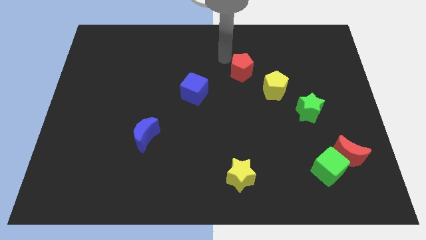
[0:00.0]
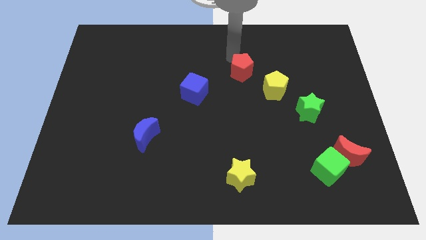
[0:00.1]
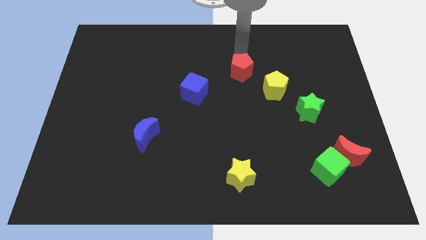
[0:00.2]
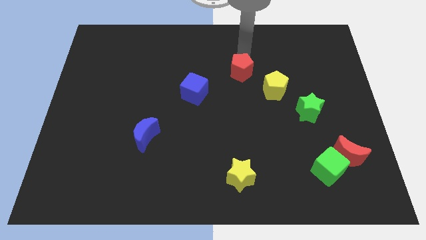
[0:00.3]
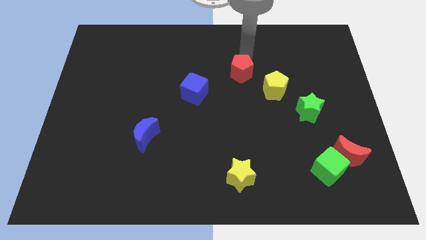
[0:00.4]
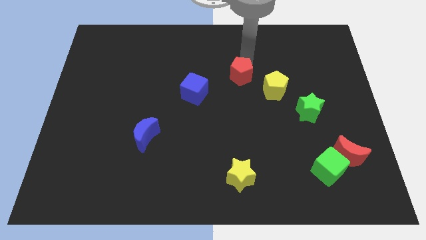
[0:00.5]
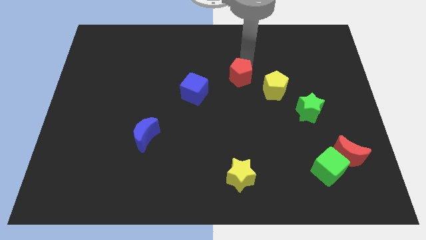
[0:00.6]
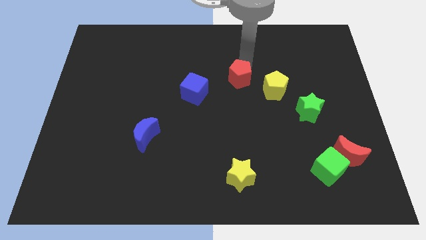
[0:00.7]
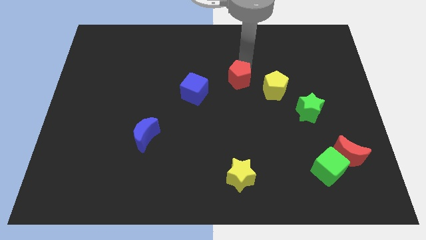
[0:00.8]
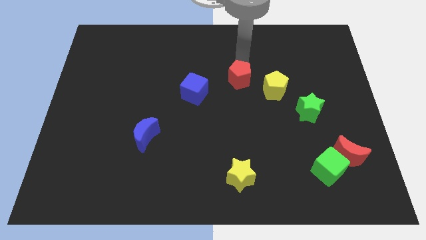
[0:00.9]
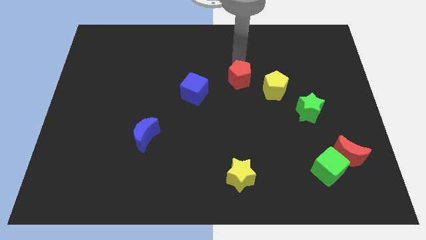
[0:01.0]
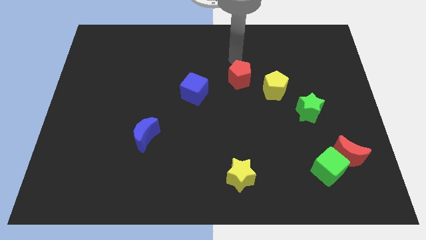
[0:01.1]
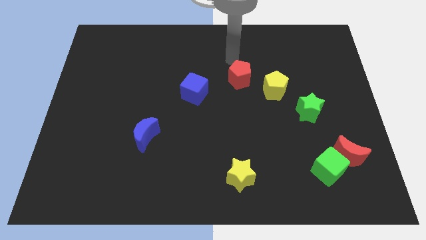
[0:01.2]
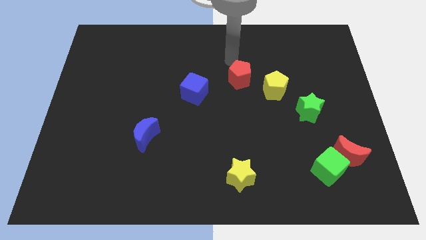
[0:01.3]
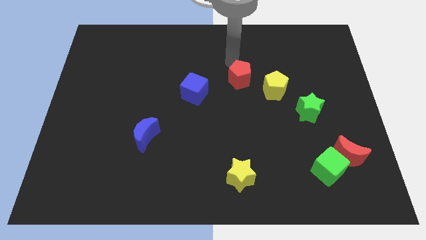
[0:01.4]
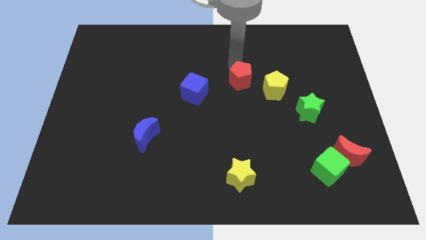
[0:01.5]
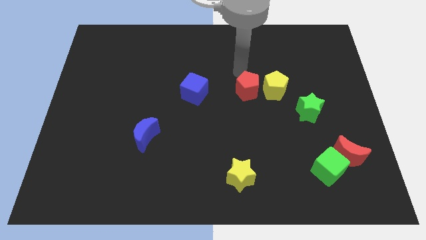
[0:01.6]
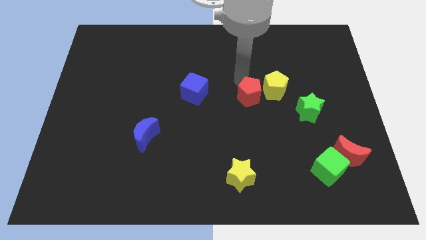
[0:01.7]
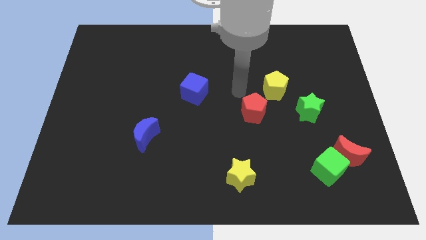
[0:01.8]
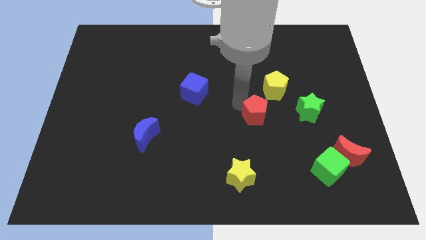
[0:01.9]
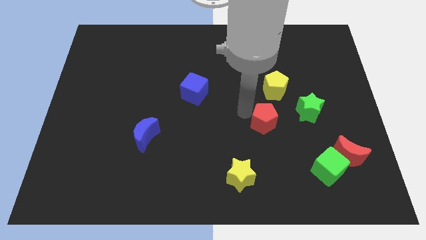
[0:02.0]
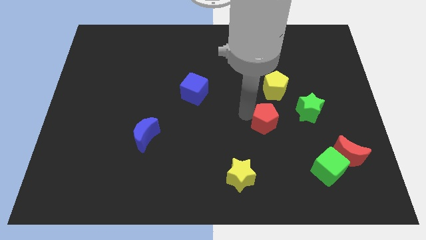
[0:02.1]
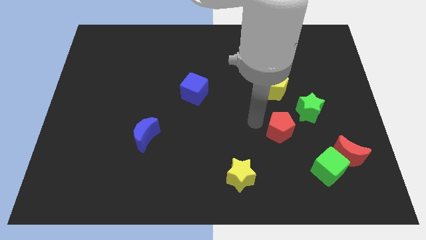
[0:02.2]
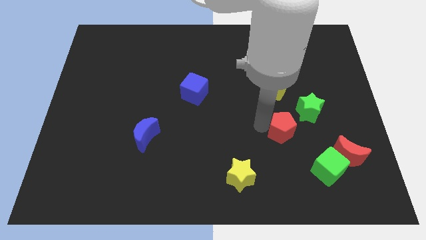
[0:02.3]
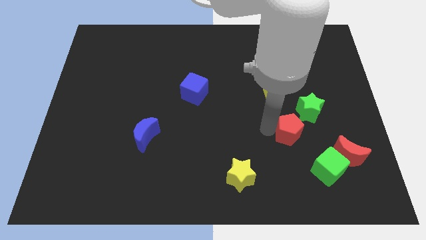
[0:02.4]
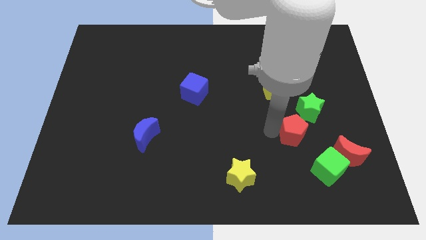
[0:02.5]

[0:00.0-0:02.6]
place the red pentagon in between the green star and yellow star

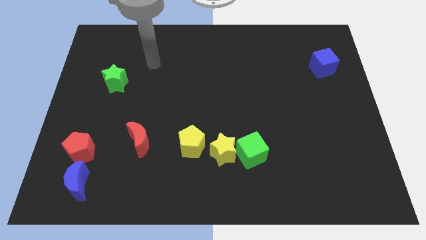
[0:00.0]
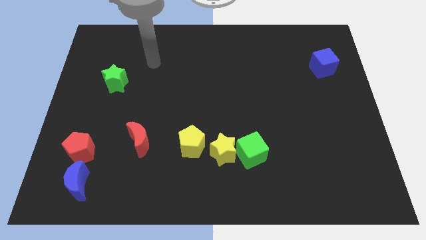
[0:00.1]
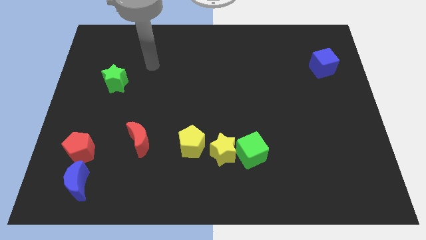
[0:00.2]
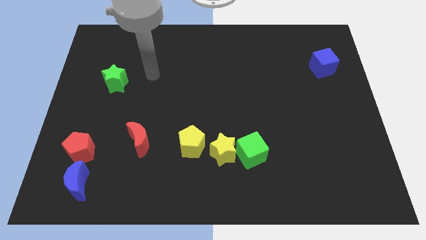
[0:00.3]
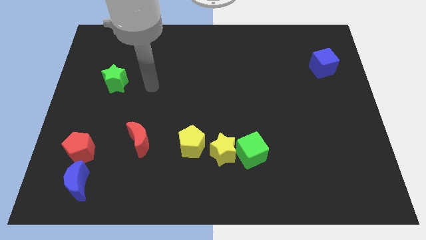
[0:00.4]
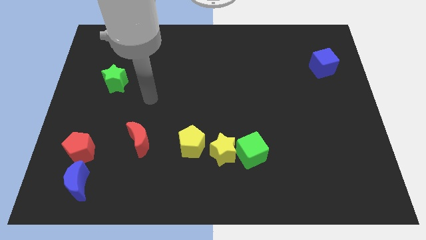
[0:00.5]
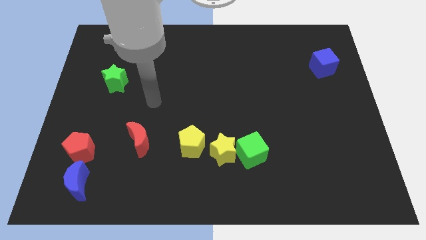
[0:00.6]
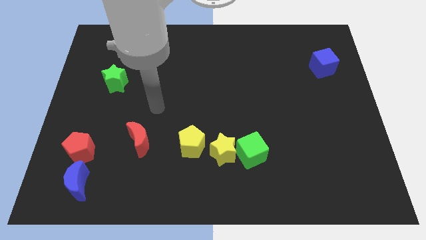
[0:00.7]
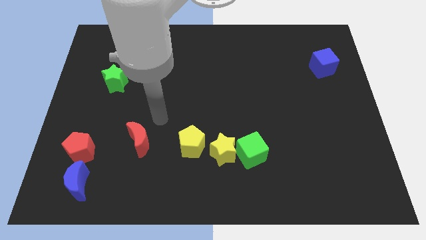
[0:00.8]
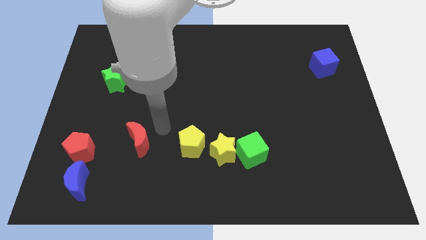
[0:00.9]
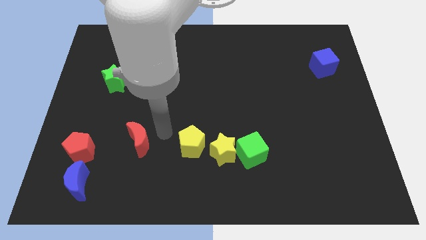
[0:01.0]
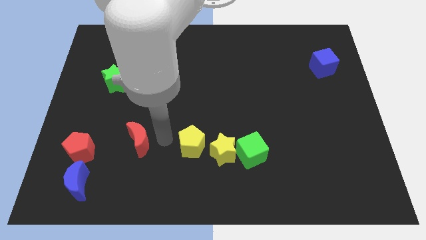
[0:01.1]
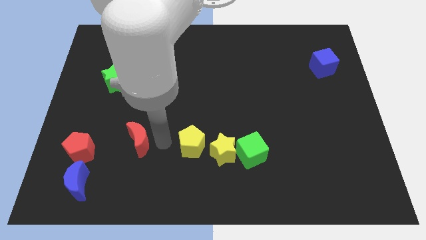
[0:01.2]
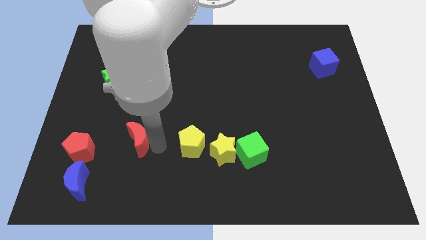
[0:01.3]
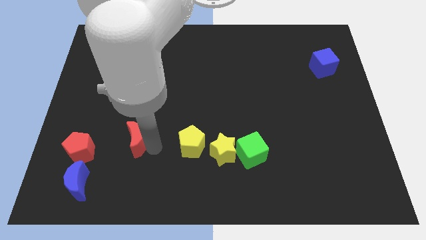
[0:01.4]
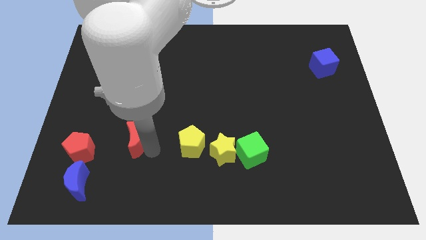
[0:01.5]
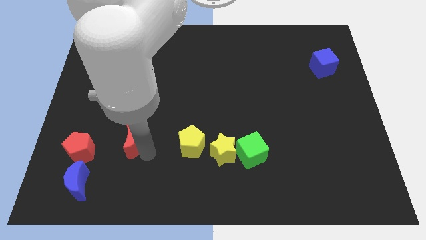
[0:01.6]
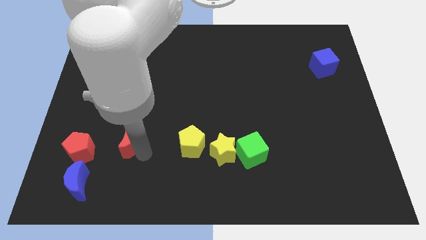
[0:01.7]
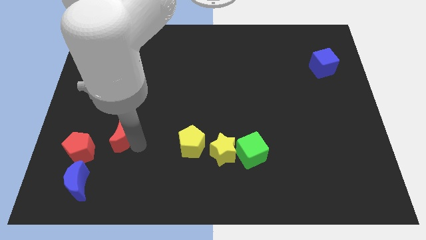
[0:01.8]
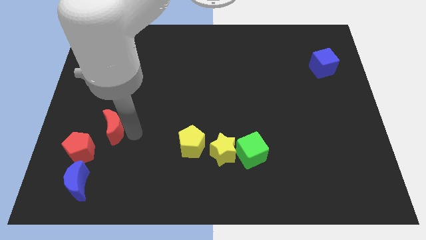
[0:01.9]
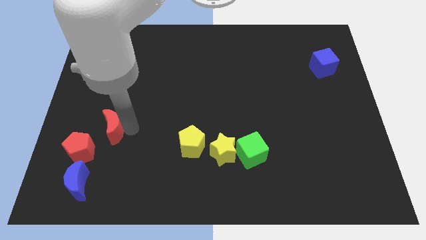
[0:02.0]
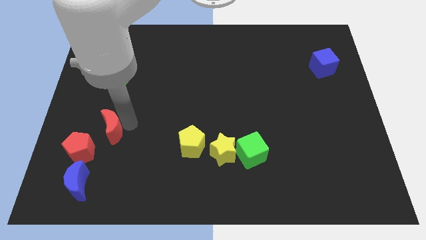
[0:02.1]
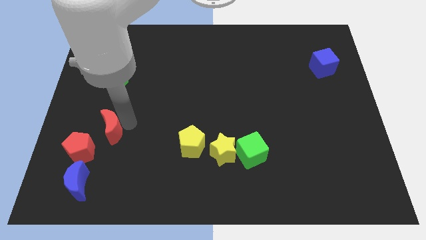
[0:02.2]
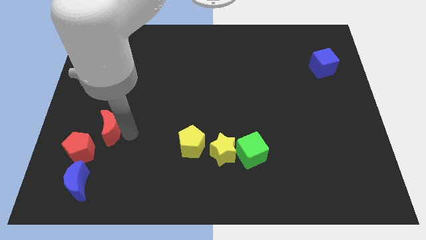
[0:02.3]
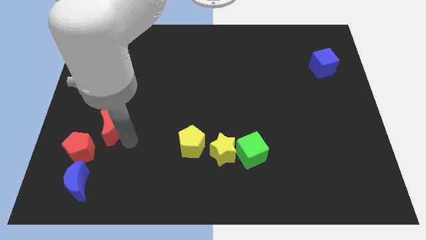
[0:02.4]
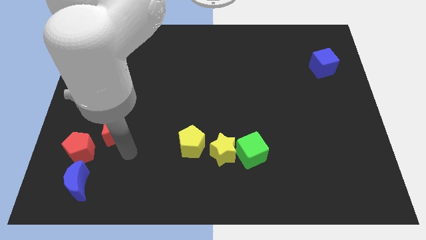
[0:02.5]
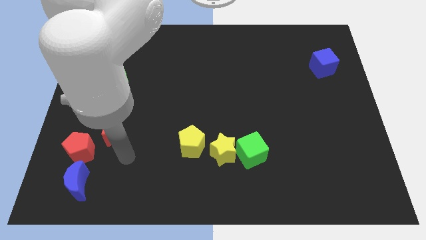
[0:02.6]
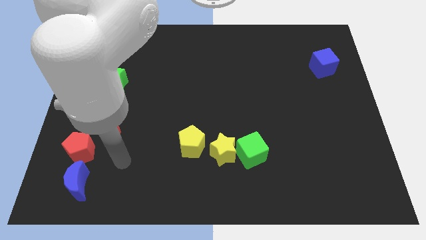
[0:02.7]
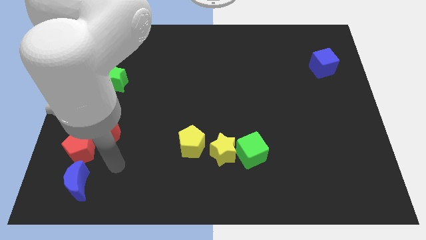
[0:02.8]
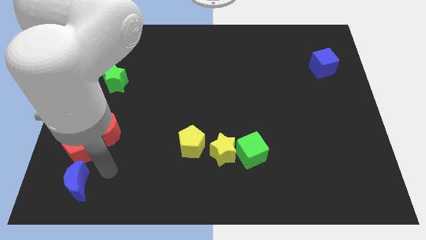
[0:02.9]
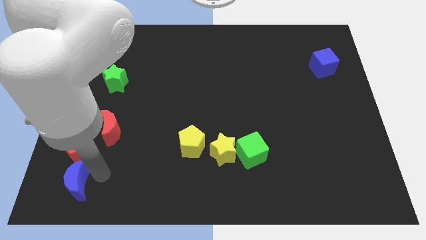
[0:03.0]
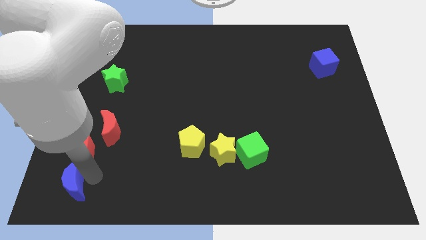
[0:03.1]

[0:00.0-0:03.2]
push the red crescent at the top right side of red pentagon

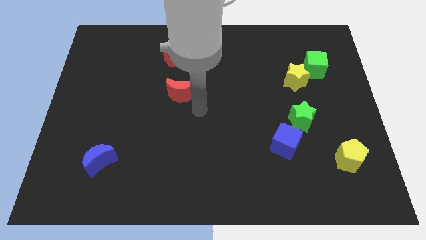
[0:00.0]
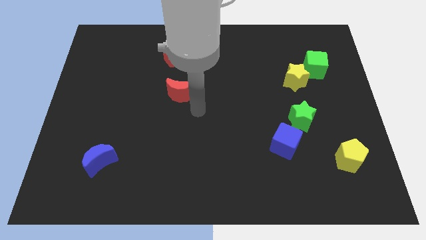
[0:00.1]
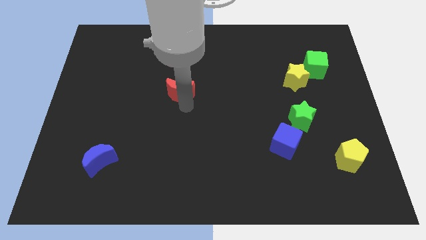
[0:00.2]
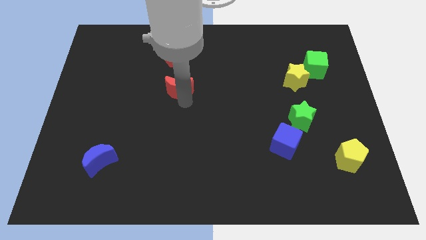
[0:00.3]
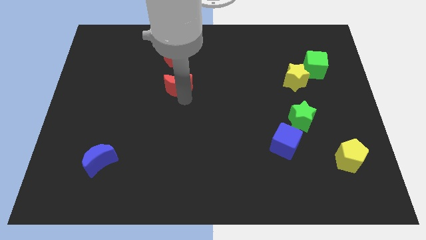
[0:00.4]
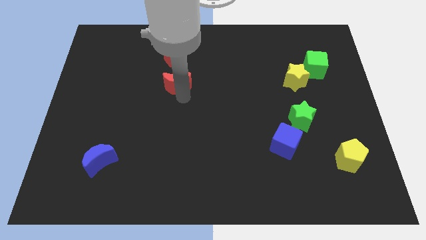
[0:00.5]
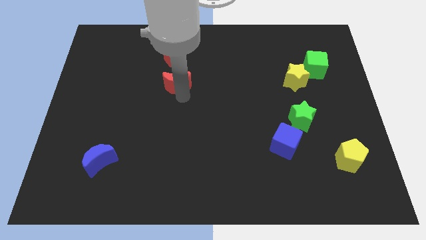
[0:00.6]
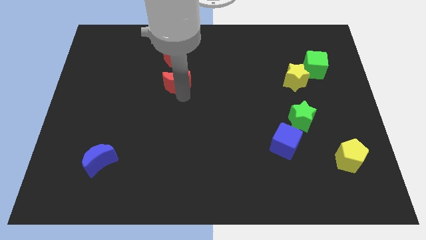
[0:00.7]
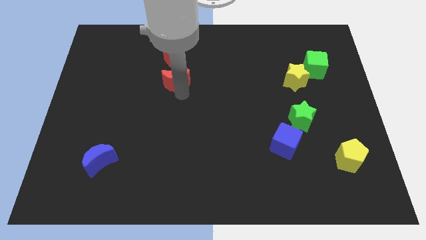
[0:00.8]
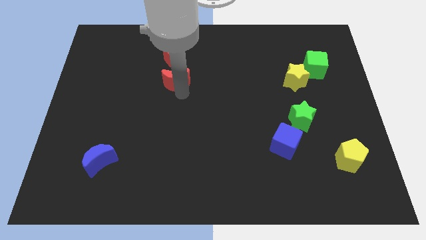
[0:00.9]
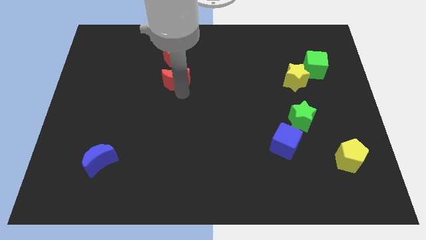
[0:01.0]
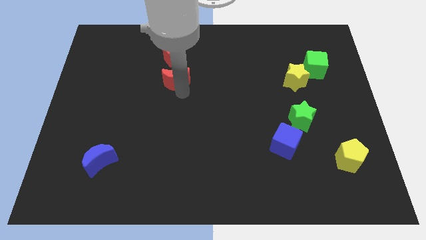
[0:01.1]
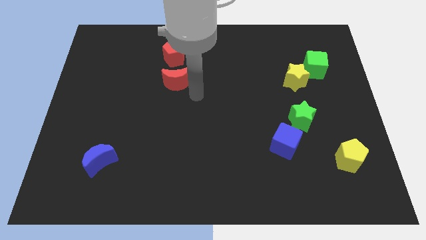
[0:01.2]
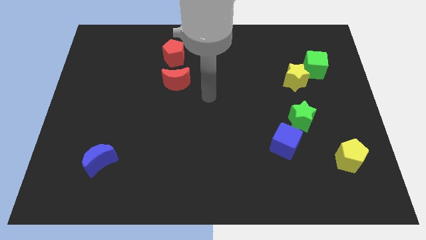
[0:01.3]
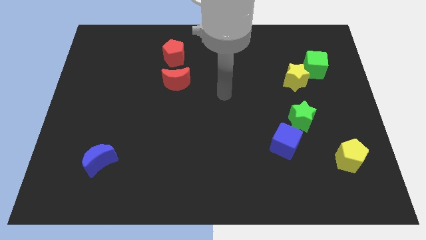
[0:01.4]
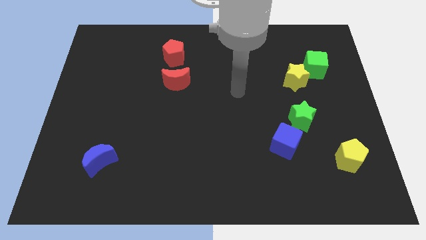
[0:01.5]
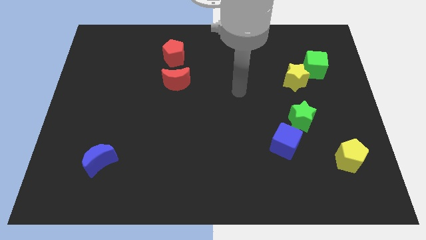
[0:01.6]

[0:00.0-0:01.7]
place red crescent closer to red pentagon

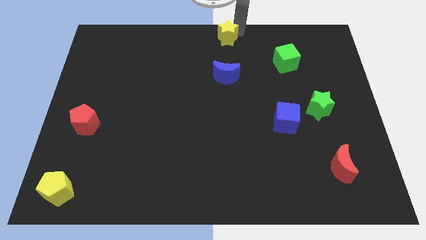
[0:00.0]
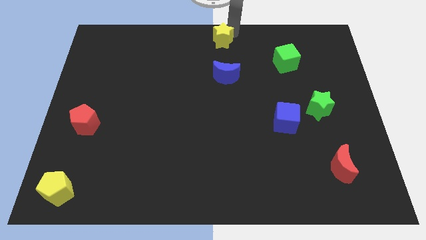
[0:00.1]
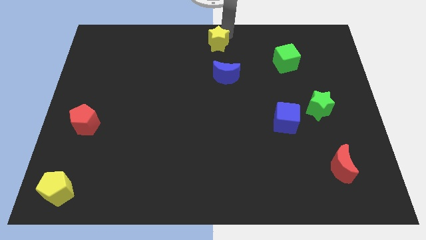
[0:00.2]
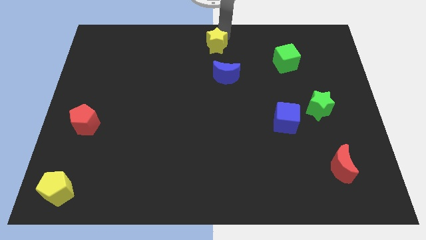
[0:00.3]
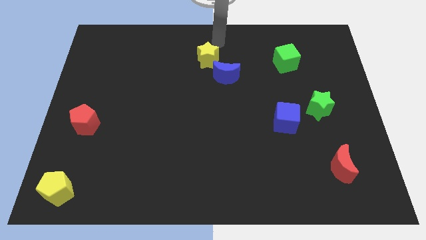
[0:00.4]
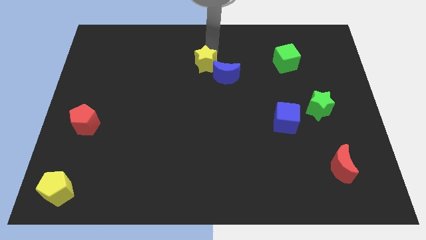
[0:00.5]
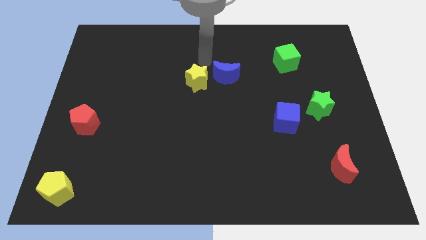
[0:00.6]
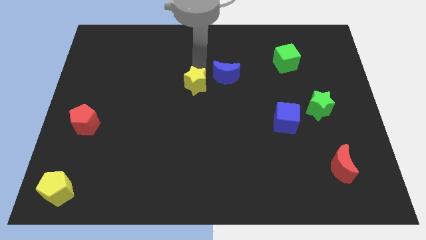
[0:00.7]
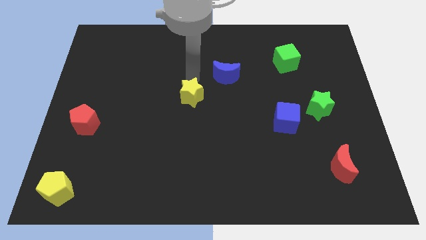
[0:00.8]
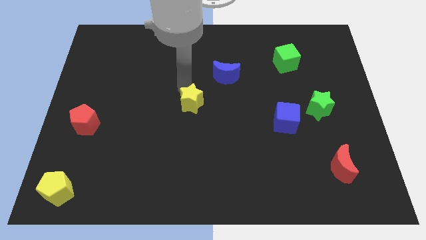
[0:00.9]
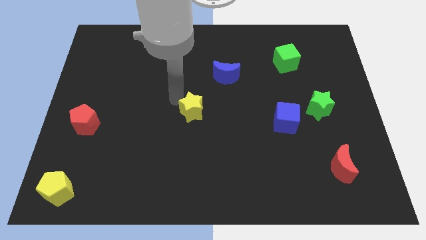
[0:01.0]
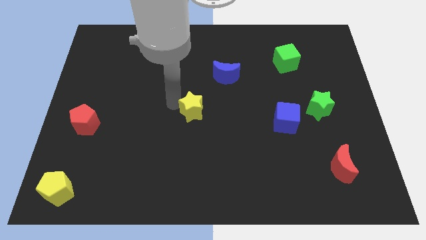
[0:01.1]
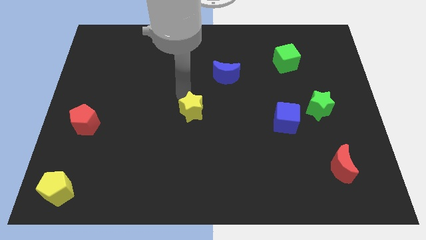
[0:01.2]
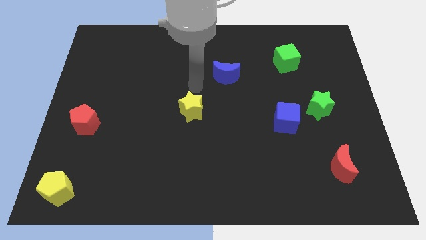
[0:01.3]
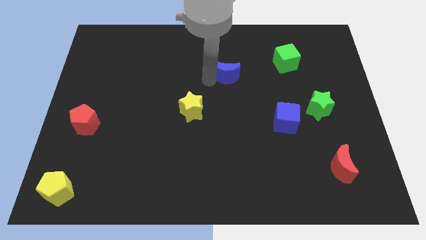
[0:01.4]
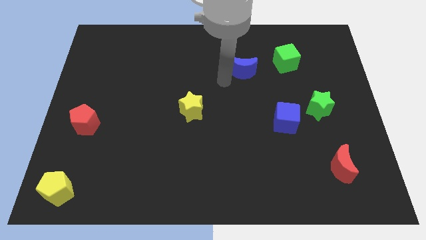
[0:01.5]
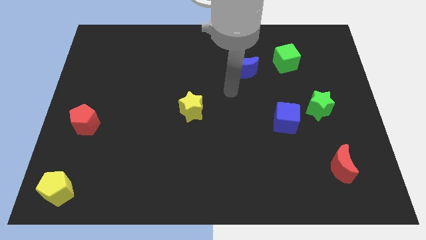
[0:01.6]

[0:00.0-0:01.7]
push the yellow star diagonally bottom left to the blue moon
